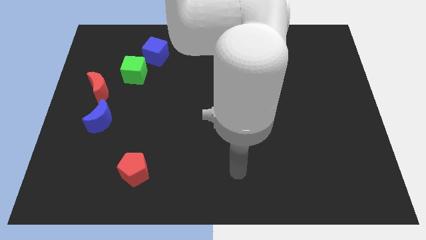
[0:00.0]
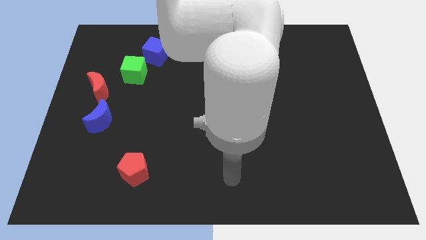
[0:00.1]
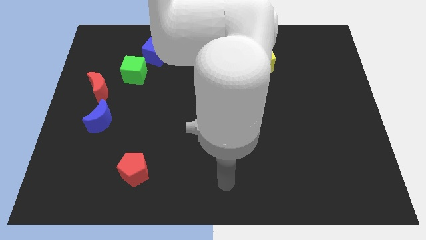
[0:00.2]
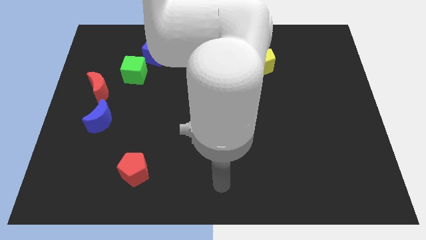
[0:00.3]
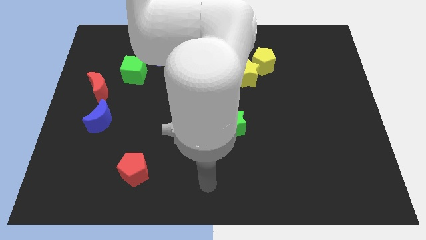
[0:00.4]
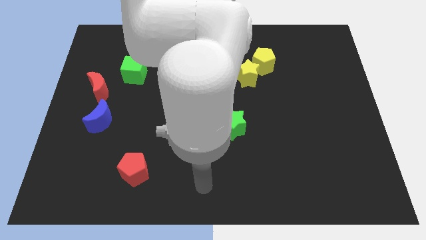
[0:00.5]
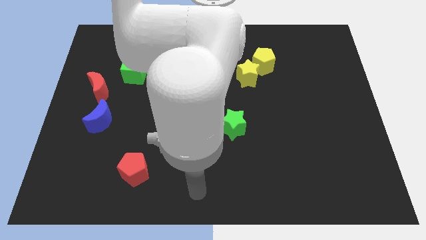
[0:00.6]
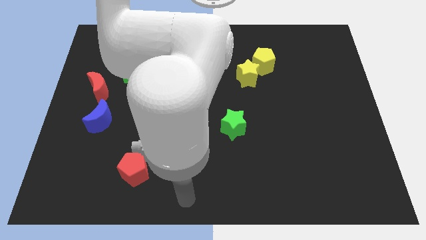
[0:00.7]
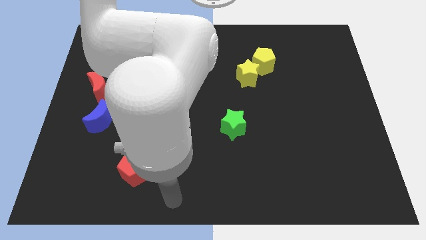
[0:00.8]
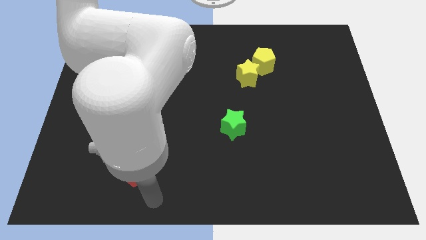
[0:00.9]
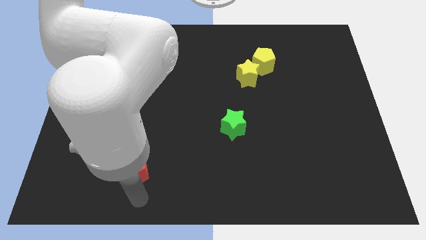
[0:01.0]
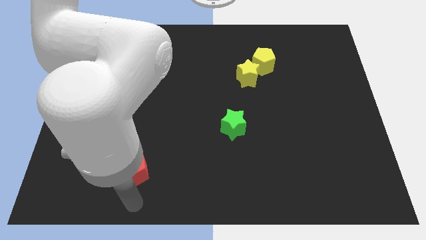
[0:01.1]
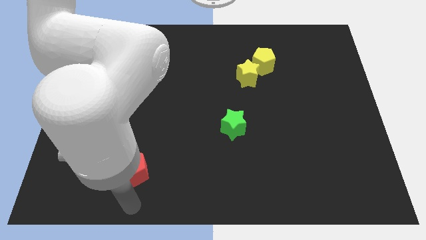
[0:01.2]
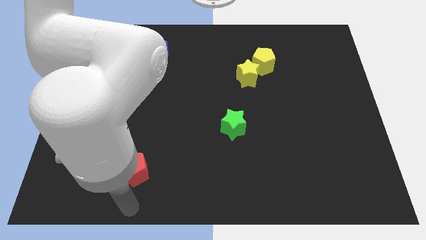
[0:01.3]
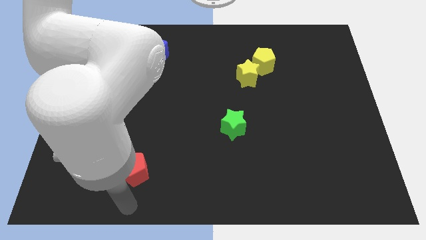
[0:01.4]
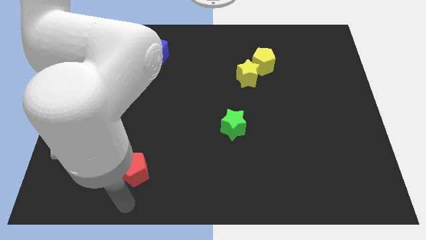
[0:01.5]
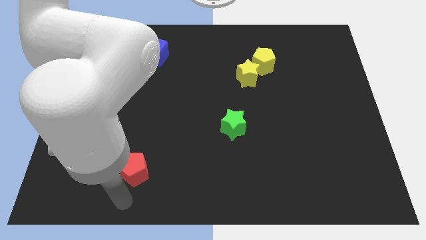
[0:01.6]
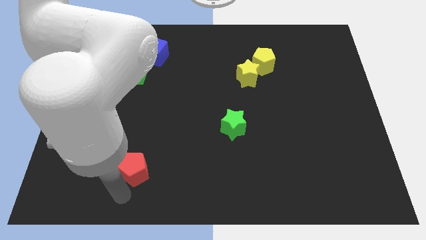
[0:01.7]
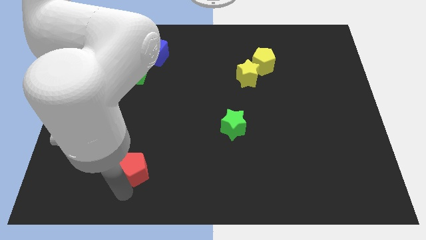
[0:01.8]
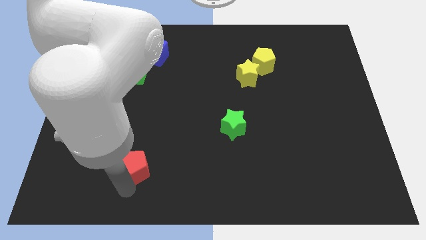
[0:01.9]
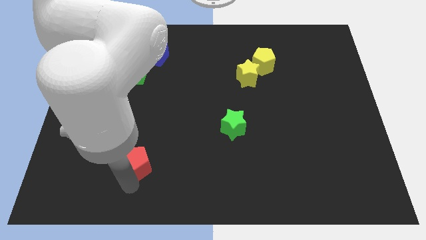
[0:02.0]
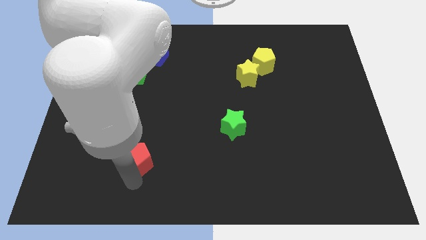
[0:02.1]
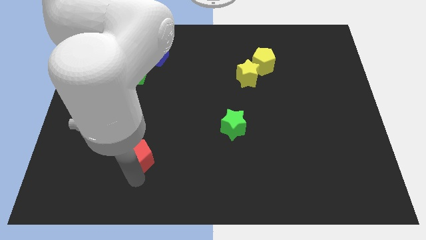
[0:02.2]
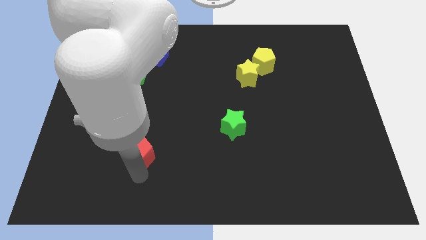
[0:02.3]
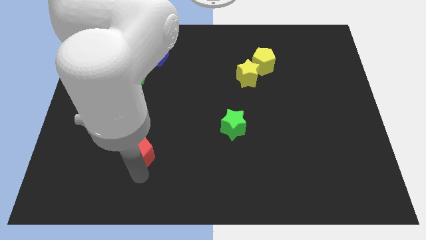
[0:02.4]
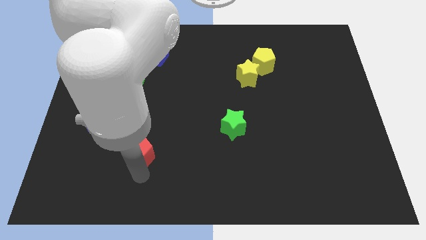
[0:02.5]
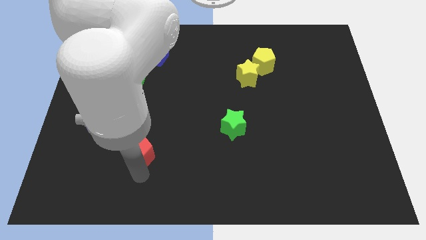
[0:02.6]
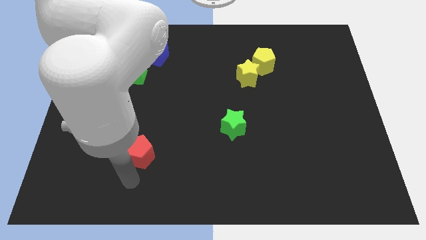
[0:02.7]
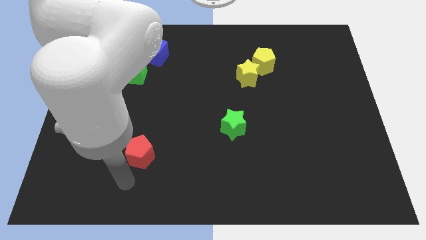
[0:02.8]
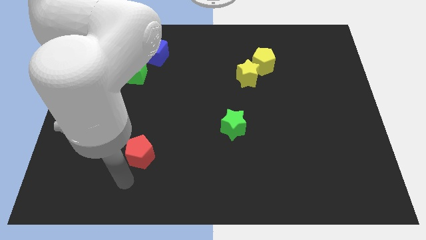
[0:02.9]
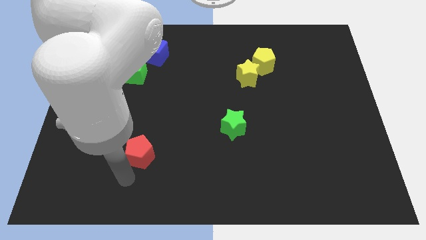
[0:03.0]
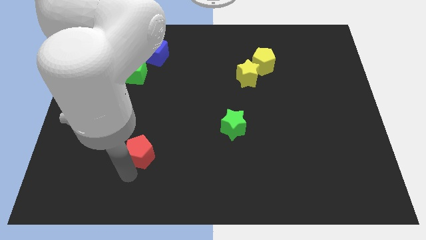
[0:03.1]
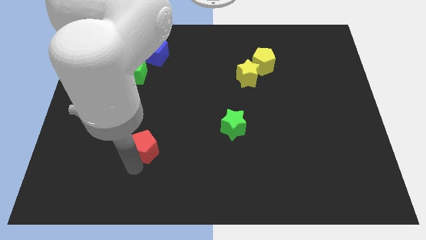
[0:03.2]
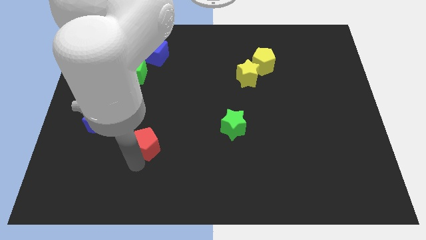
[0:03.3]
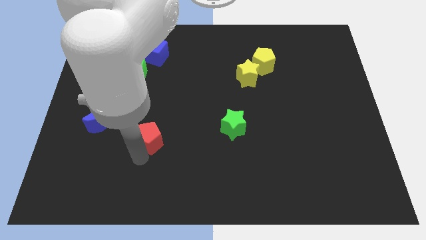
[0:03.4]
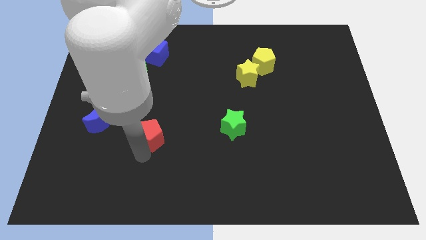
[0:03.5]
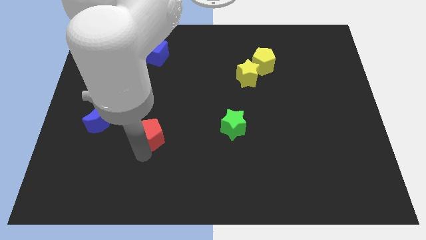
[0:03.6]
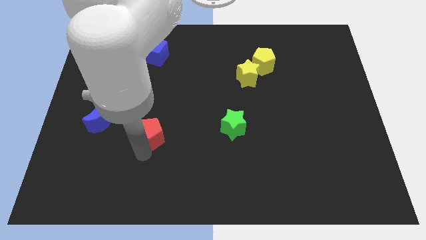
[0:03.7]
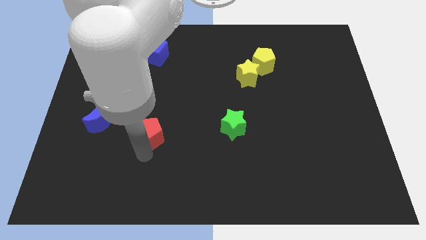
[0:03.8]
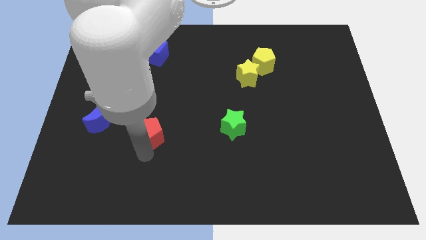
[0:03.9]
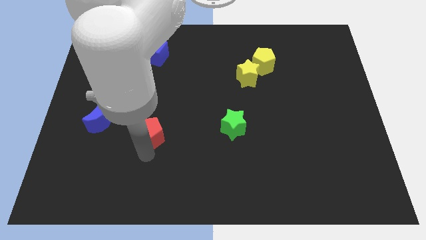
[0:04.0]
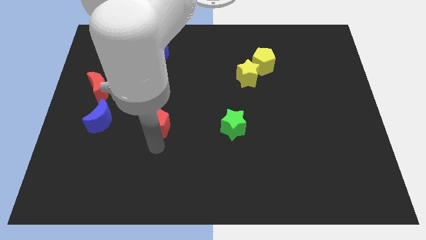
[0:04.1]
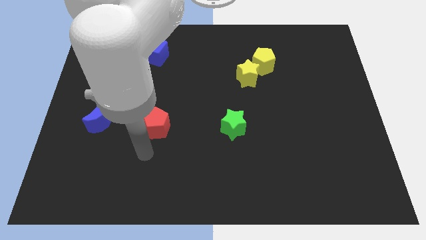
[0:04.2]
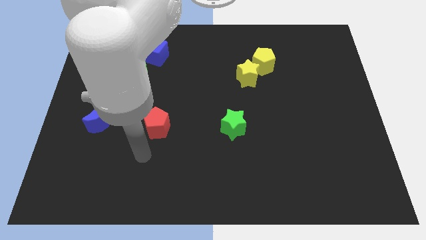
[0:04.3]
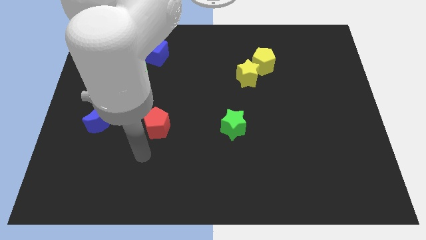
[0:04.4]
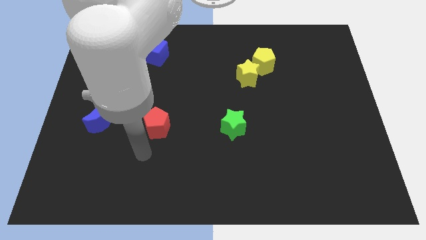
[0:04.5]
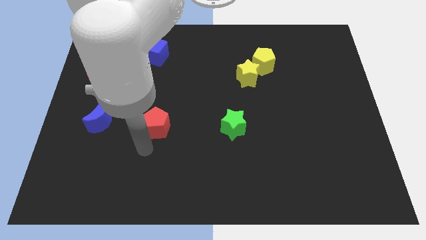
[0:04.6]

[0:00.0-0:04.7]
put the red pentagon between the blue moon and green star

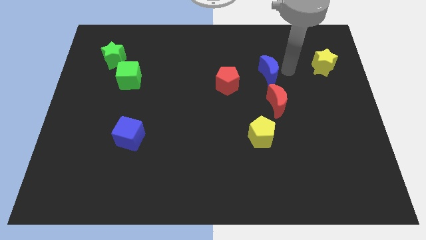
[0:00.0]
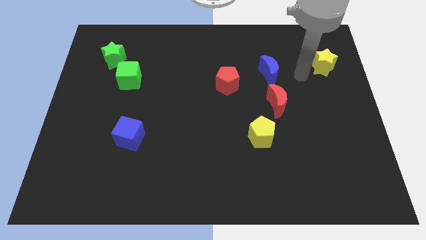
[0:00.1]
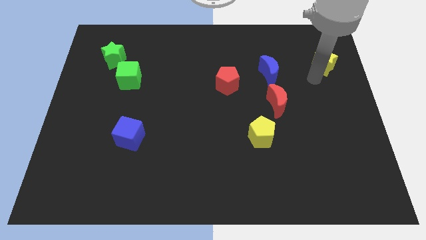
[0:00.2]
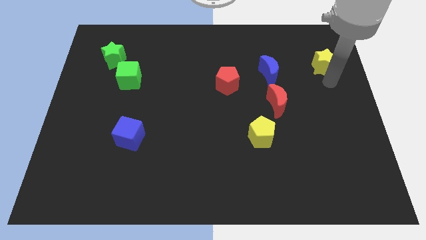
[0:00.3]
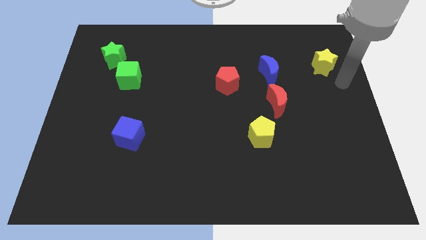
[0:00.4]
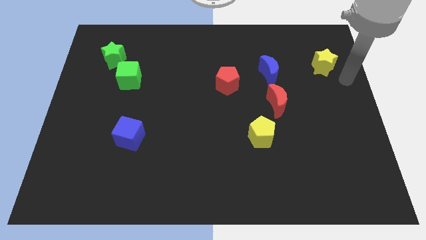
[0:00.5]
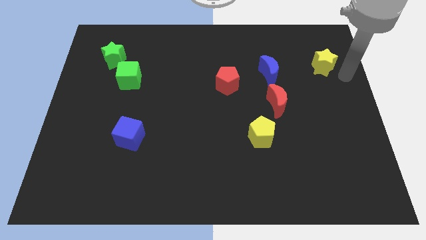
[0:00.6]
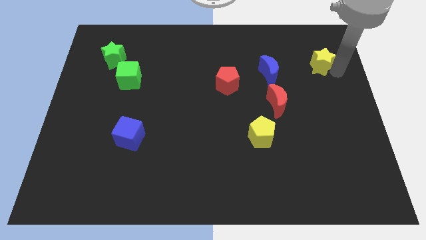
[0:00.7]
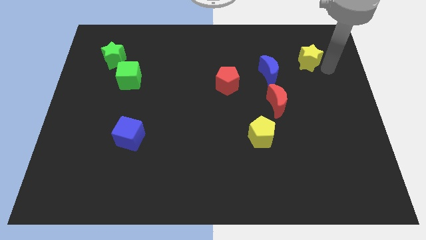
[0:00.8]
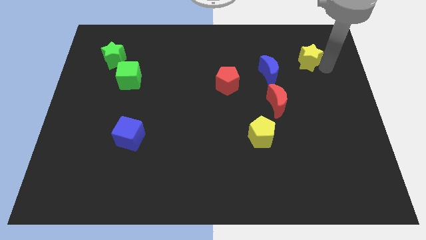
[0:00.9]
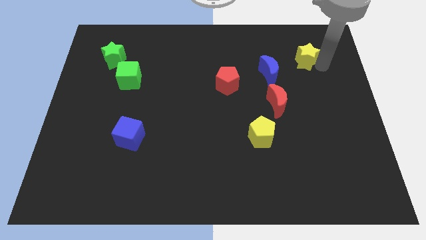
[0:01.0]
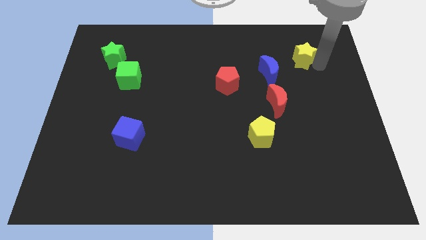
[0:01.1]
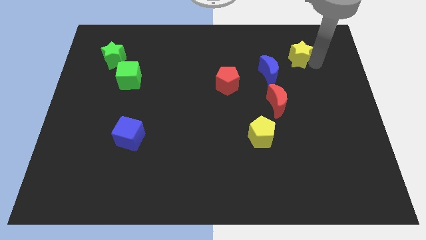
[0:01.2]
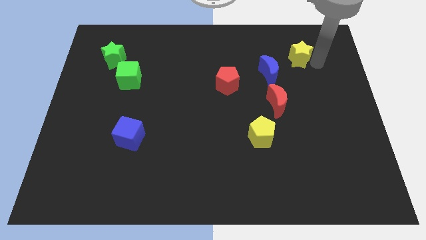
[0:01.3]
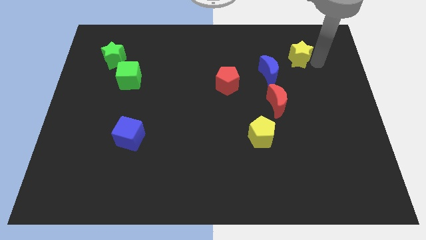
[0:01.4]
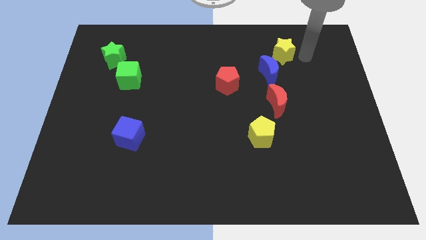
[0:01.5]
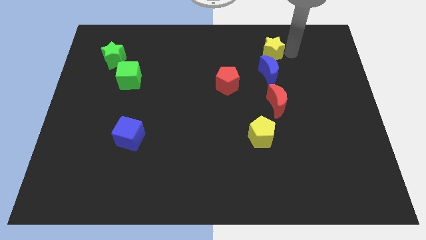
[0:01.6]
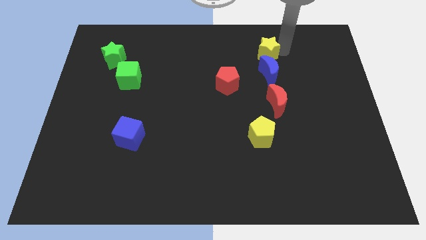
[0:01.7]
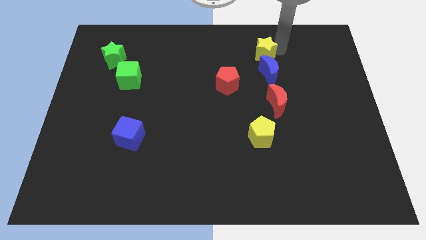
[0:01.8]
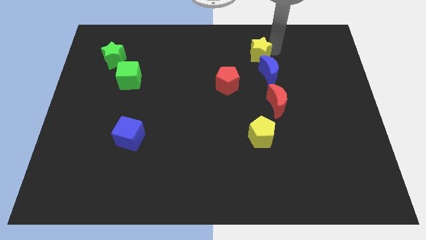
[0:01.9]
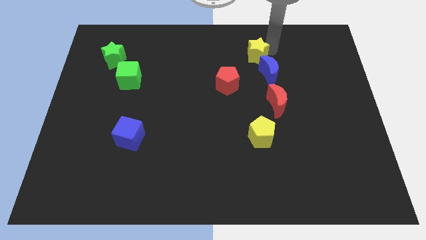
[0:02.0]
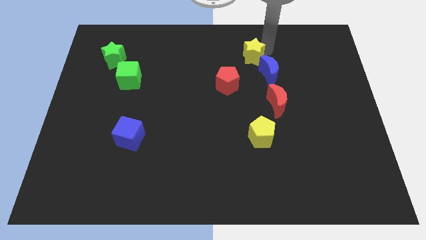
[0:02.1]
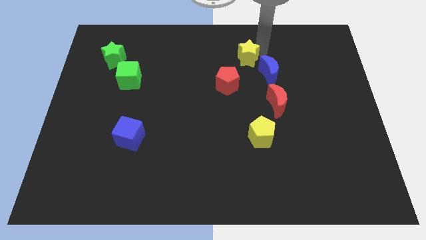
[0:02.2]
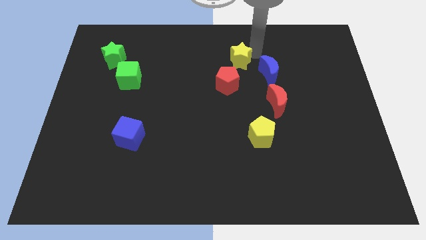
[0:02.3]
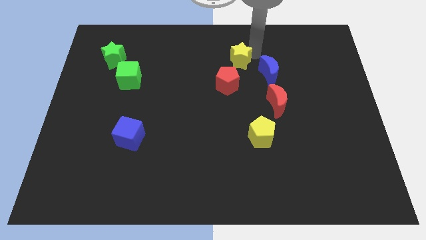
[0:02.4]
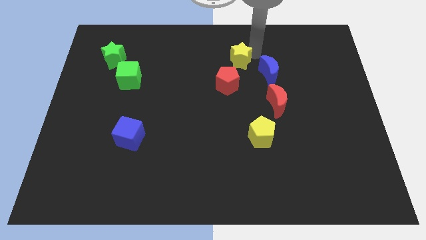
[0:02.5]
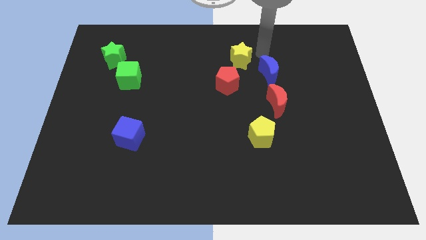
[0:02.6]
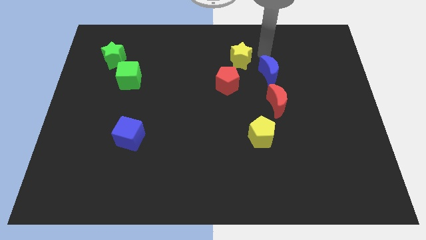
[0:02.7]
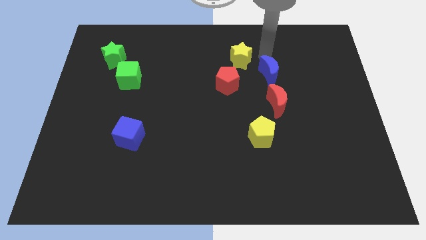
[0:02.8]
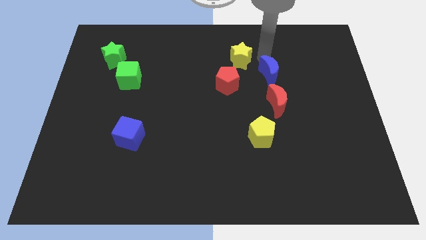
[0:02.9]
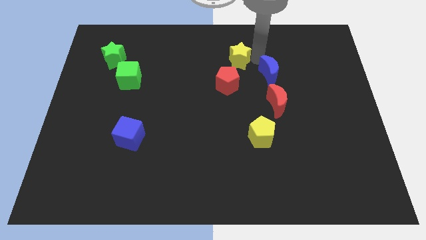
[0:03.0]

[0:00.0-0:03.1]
put the yellow star diagonally top left to the blue moon

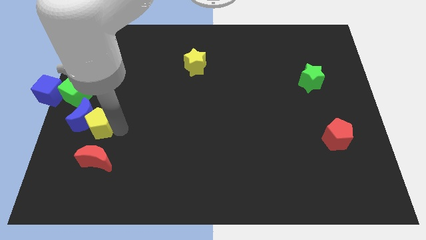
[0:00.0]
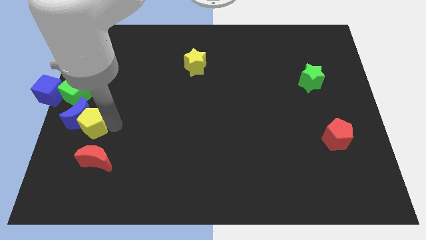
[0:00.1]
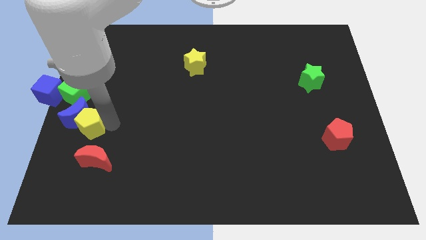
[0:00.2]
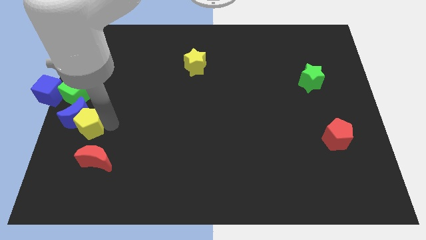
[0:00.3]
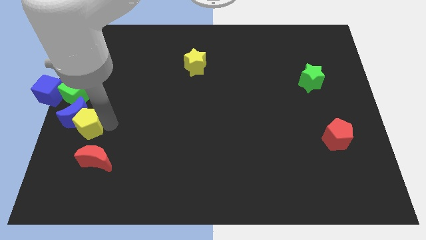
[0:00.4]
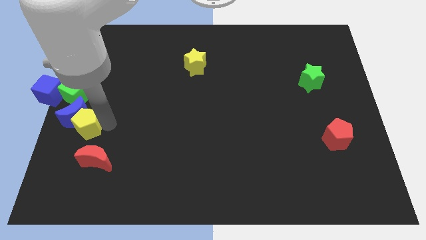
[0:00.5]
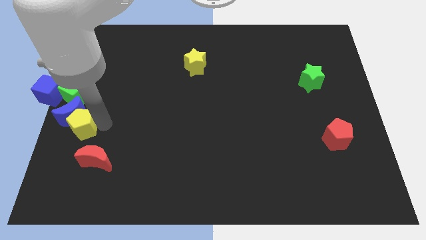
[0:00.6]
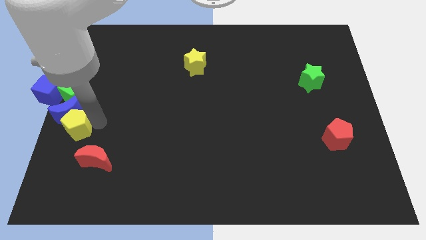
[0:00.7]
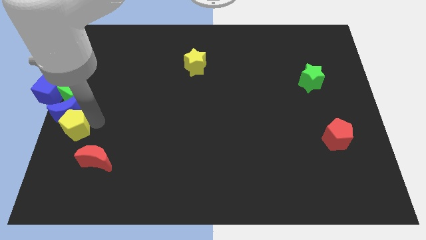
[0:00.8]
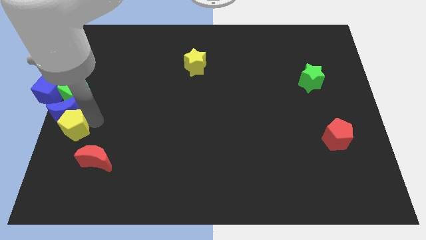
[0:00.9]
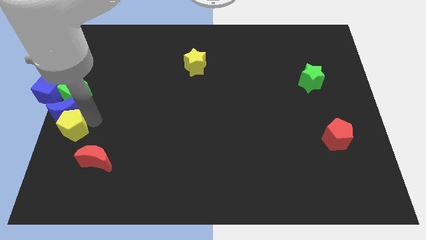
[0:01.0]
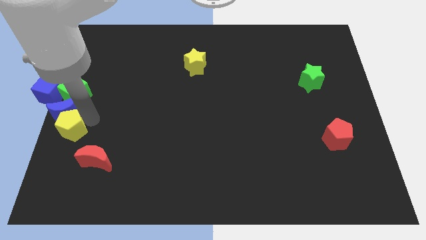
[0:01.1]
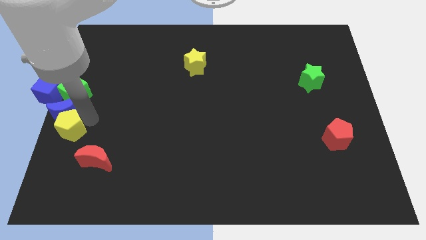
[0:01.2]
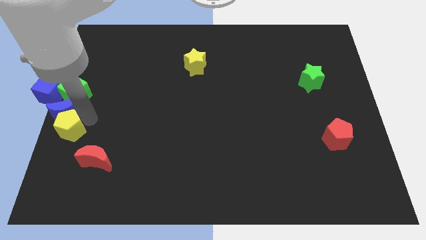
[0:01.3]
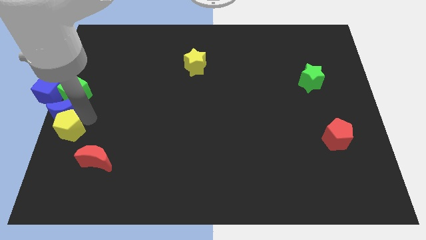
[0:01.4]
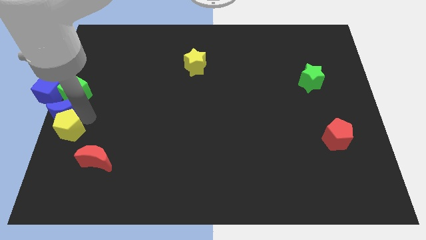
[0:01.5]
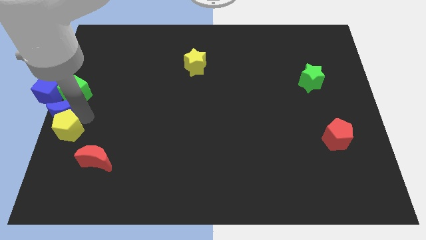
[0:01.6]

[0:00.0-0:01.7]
move the blue moon with yellow block to the center left of the board
